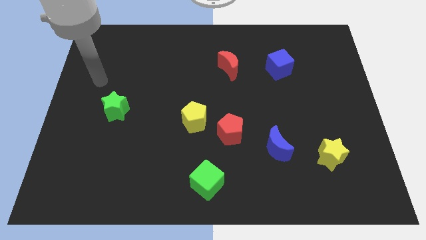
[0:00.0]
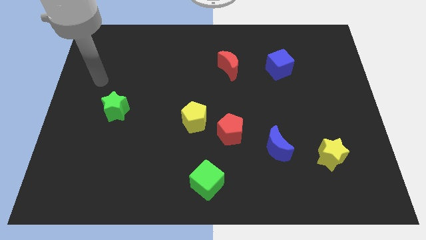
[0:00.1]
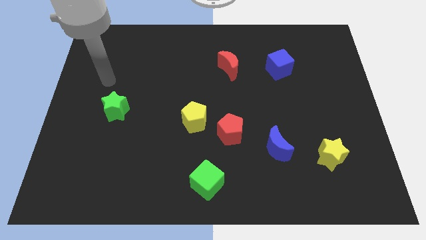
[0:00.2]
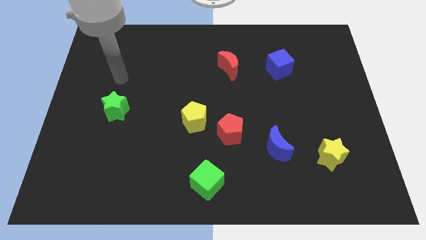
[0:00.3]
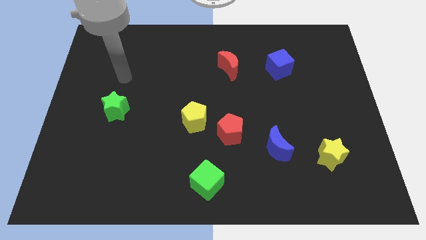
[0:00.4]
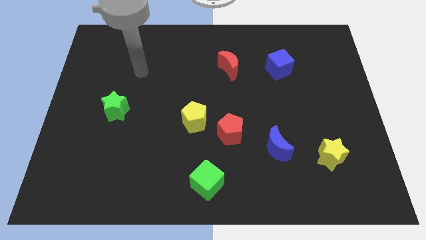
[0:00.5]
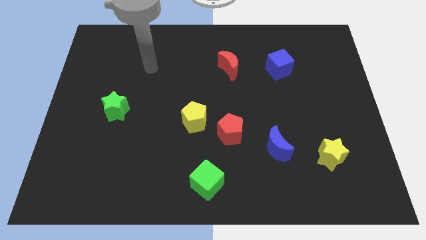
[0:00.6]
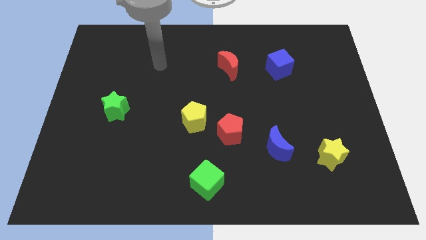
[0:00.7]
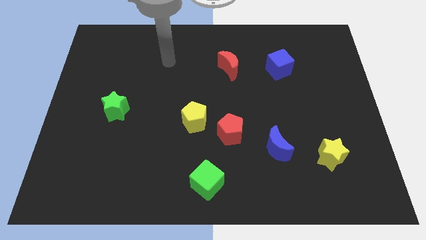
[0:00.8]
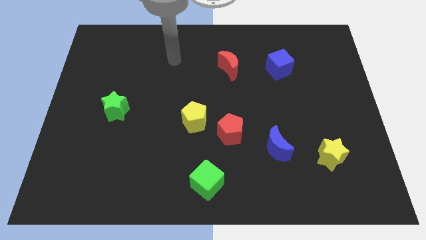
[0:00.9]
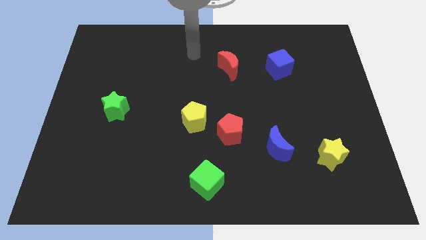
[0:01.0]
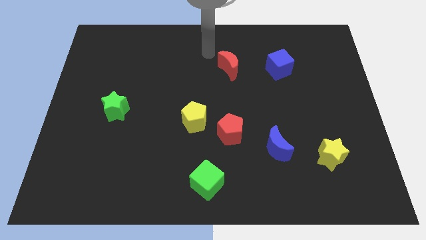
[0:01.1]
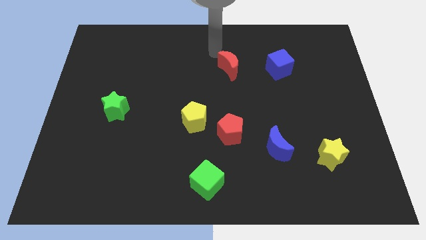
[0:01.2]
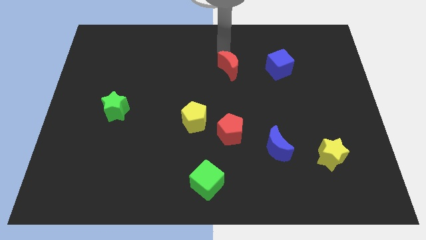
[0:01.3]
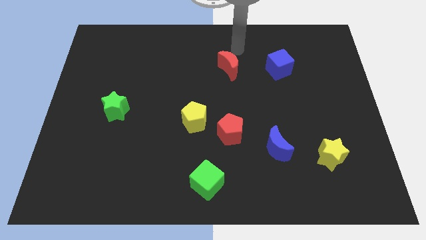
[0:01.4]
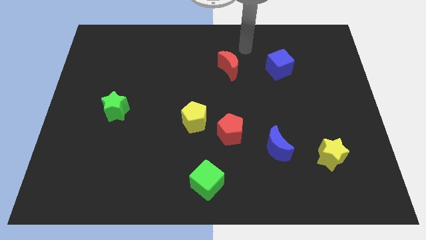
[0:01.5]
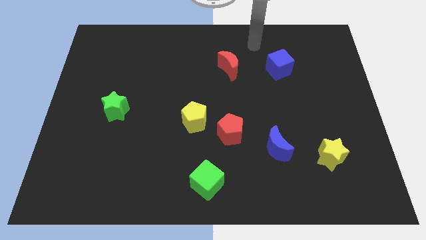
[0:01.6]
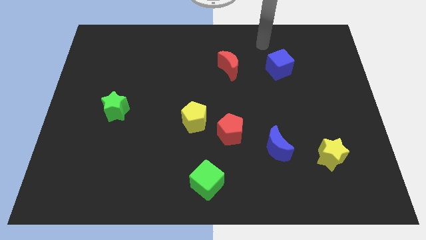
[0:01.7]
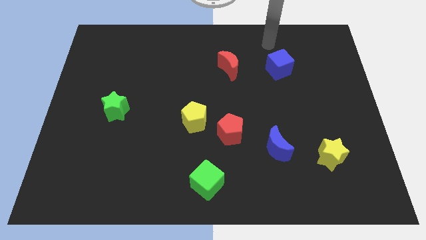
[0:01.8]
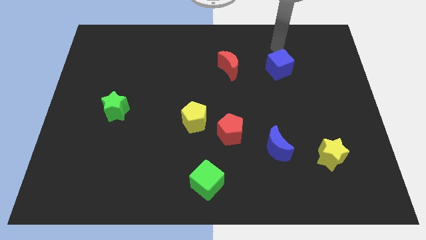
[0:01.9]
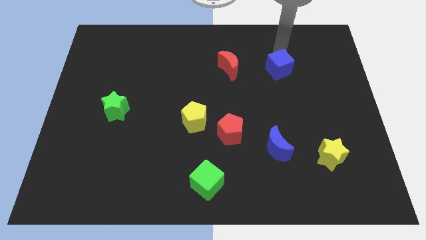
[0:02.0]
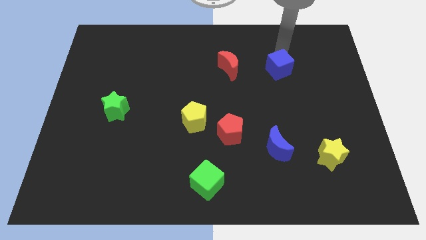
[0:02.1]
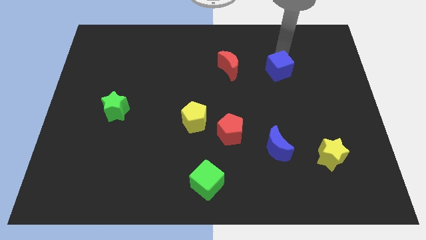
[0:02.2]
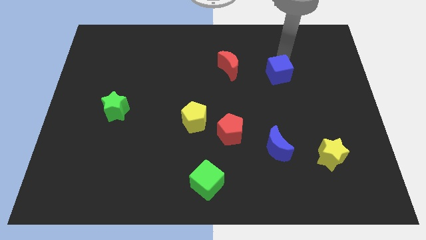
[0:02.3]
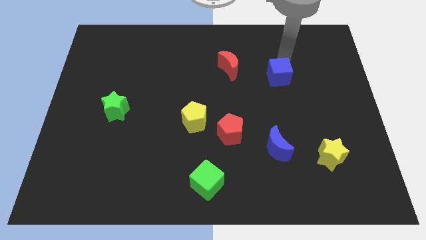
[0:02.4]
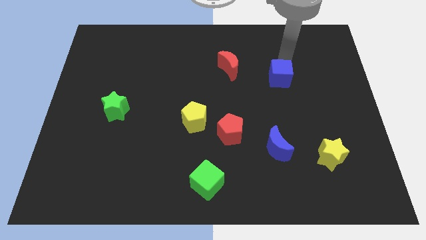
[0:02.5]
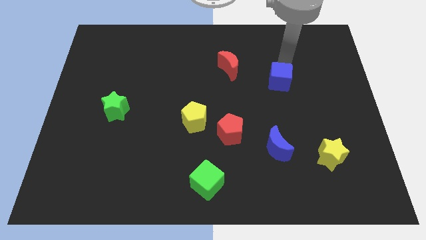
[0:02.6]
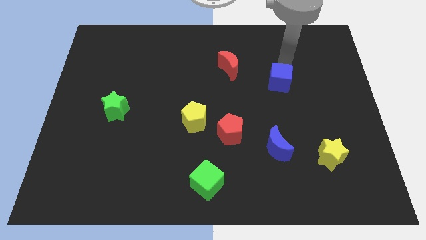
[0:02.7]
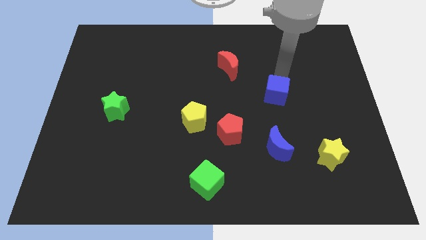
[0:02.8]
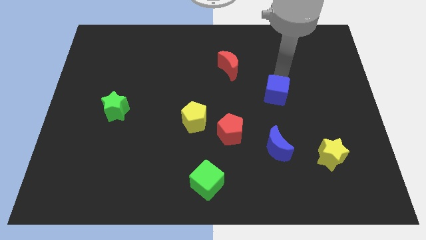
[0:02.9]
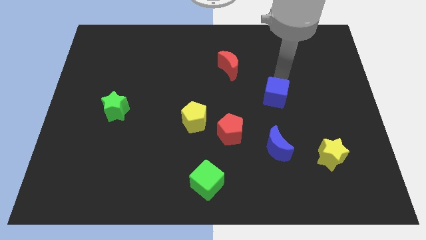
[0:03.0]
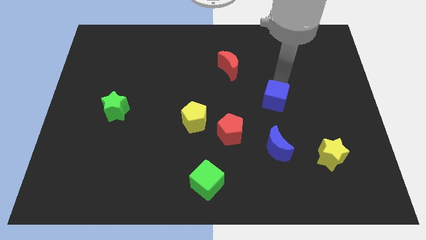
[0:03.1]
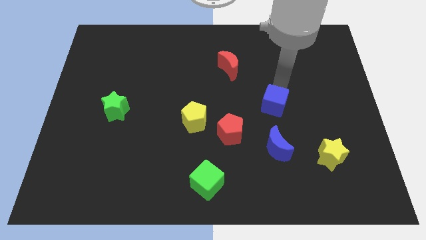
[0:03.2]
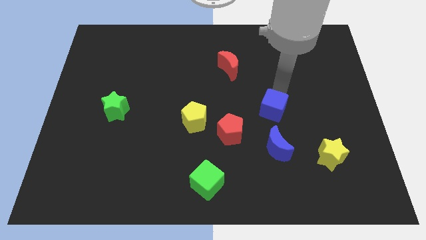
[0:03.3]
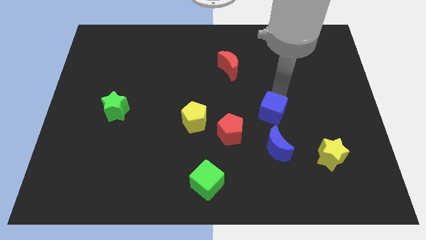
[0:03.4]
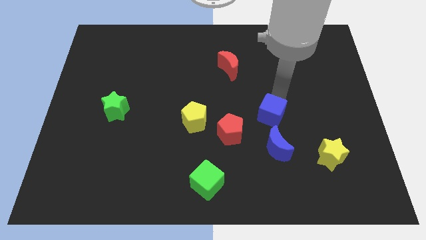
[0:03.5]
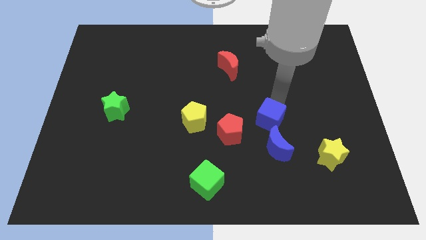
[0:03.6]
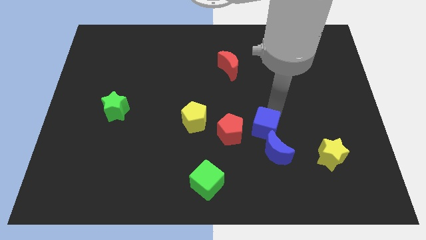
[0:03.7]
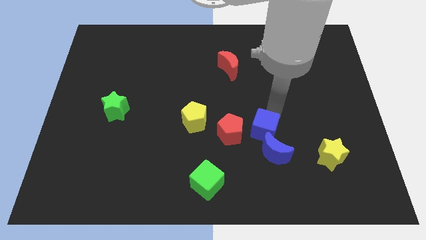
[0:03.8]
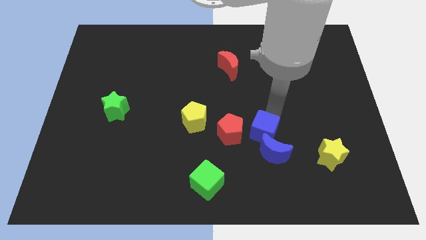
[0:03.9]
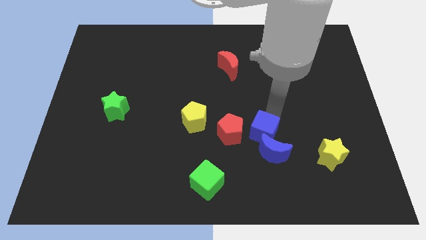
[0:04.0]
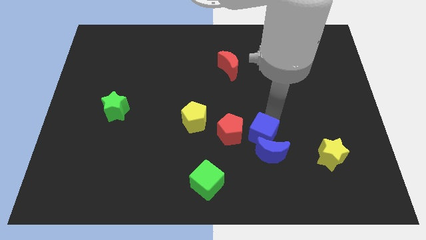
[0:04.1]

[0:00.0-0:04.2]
push the blue cube towards the blue moon

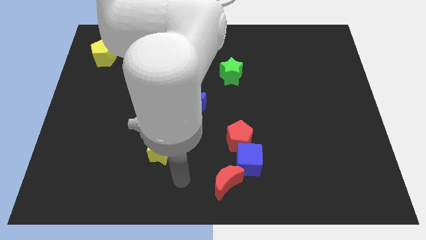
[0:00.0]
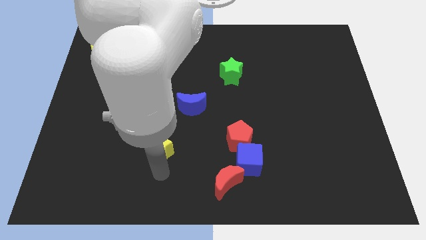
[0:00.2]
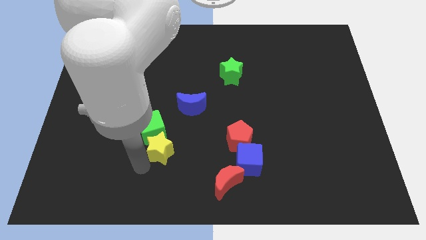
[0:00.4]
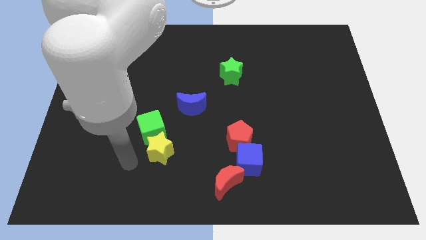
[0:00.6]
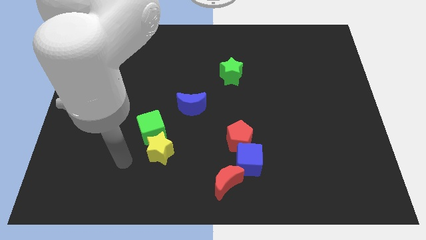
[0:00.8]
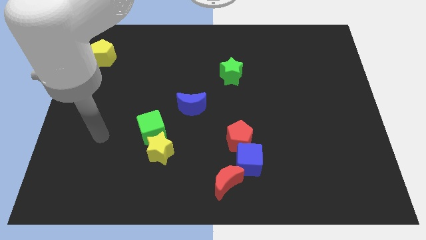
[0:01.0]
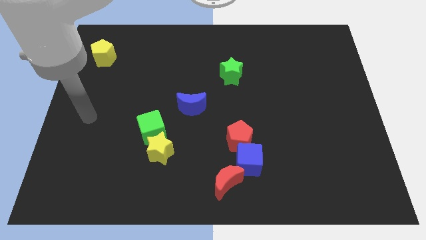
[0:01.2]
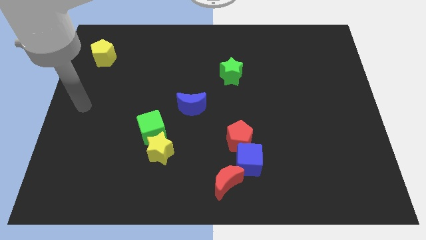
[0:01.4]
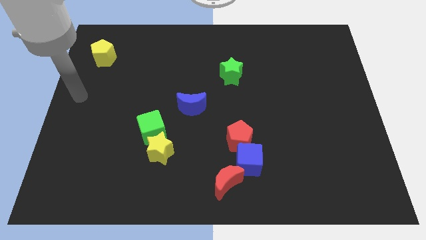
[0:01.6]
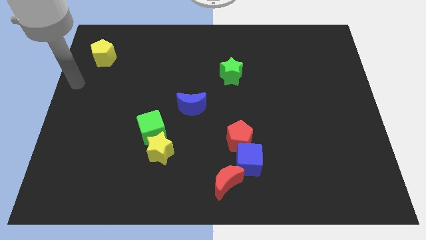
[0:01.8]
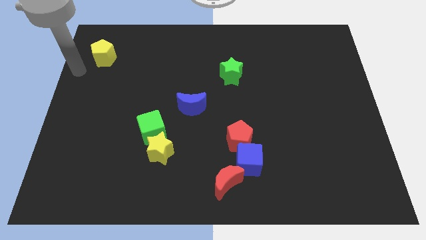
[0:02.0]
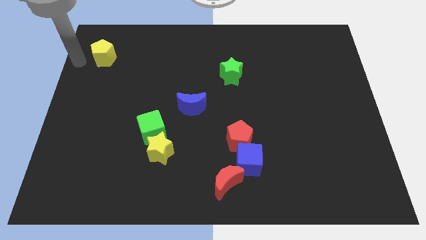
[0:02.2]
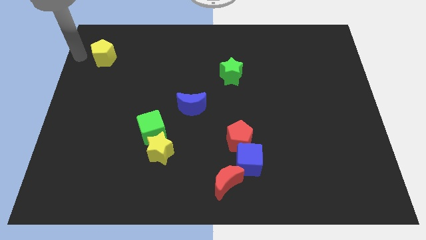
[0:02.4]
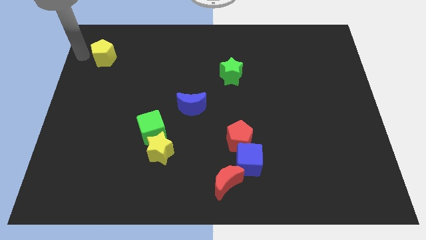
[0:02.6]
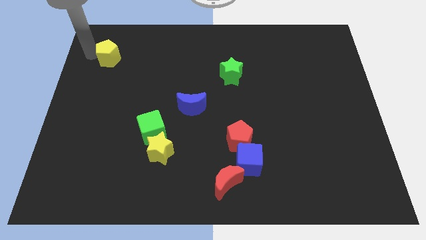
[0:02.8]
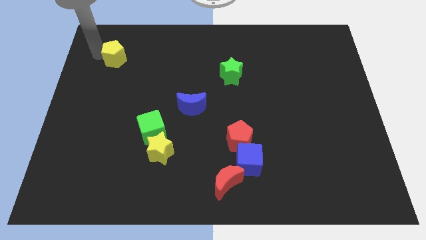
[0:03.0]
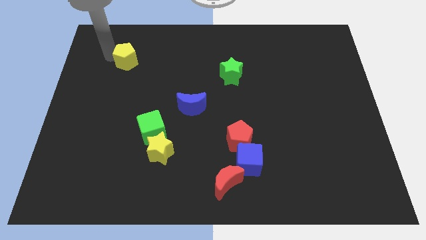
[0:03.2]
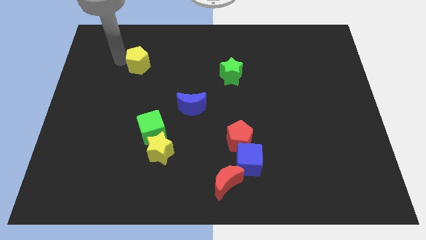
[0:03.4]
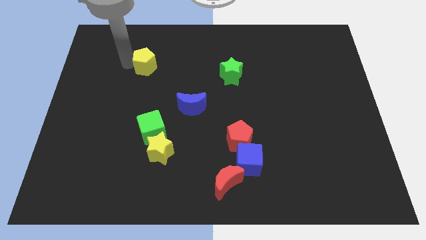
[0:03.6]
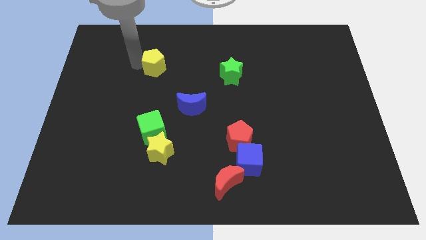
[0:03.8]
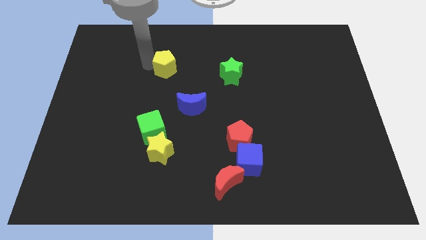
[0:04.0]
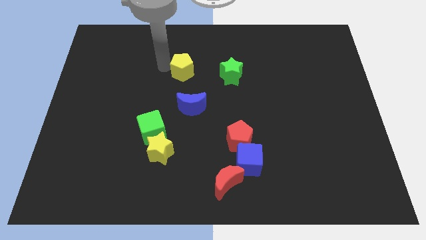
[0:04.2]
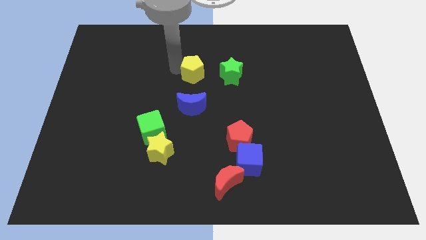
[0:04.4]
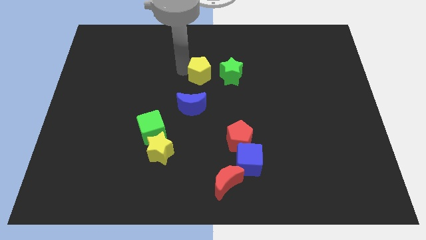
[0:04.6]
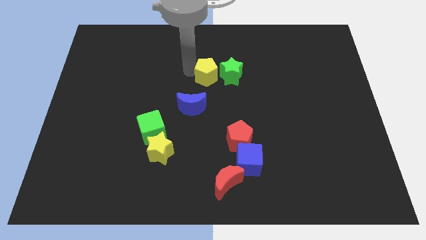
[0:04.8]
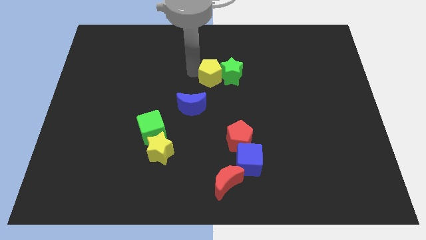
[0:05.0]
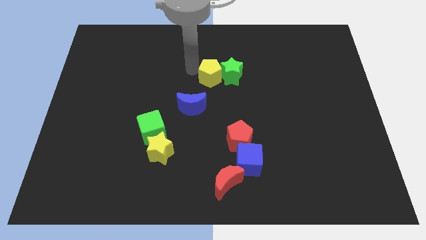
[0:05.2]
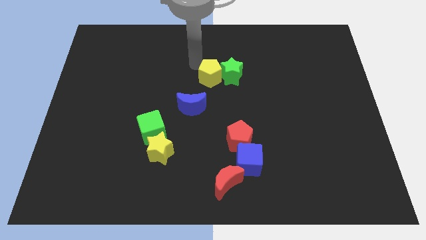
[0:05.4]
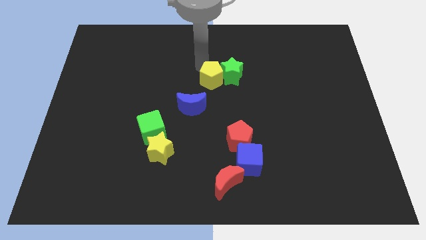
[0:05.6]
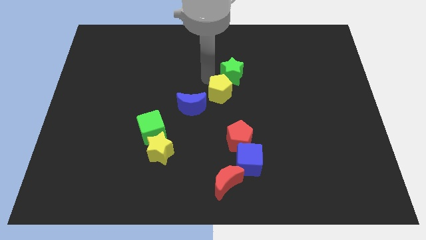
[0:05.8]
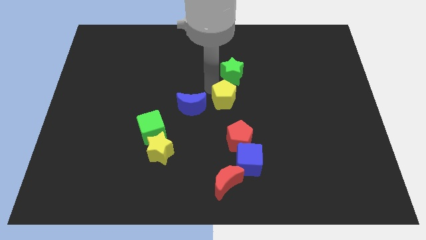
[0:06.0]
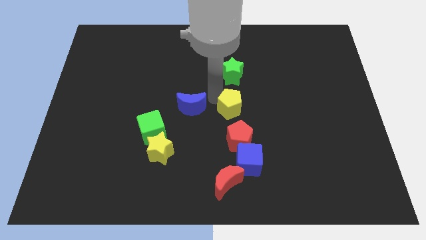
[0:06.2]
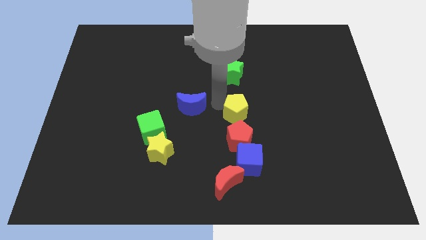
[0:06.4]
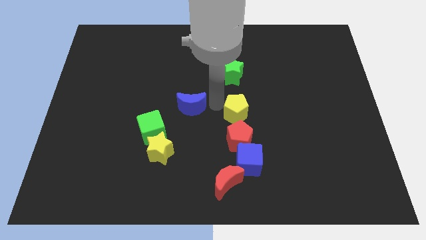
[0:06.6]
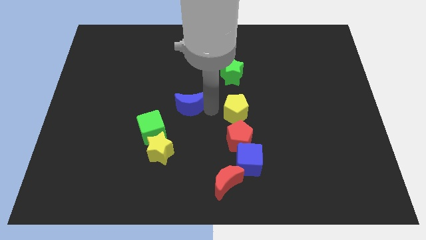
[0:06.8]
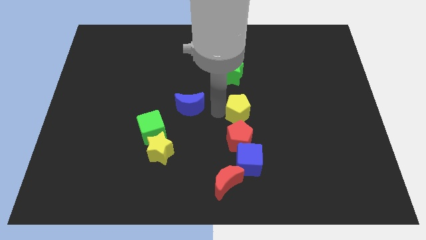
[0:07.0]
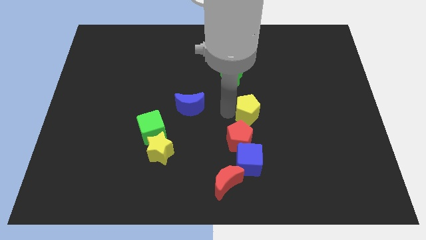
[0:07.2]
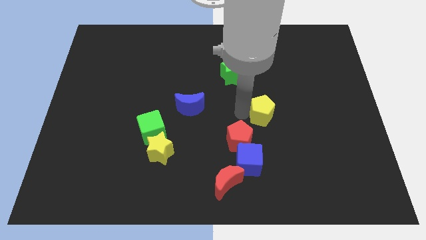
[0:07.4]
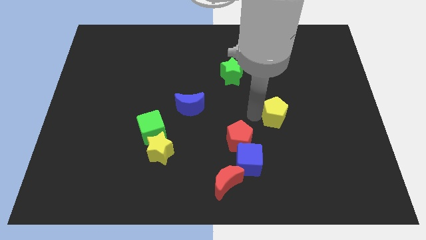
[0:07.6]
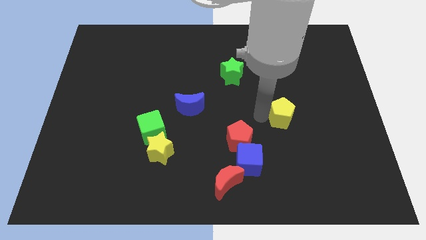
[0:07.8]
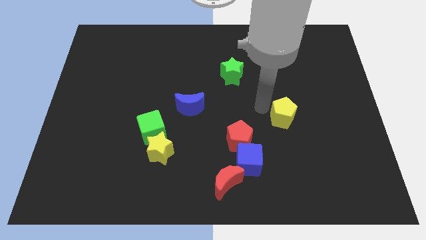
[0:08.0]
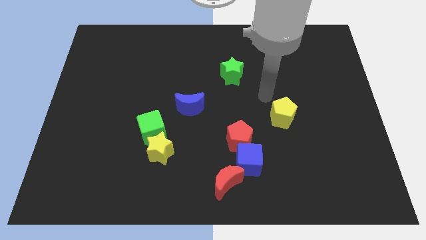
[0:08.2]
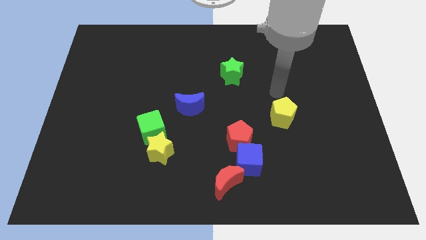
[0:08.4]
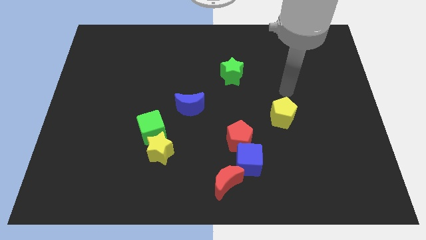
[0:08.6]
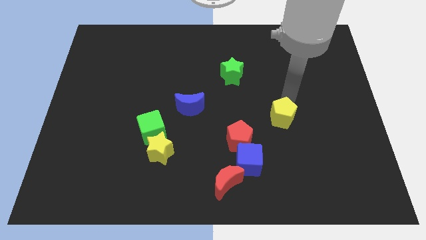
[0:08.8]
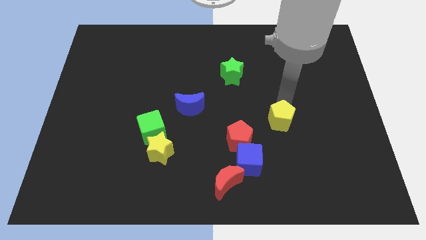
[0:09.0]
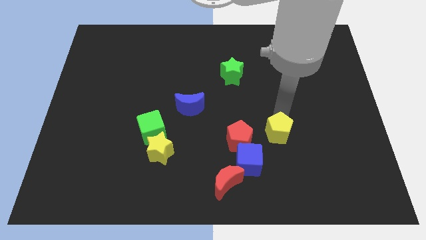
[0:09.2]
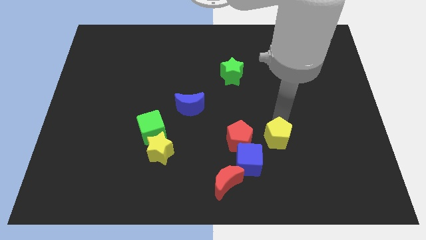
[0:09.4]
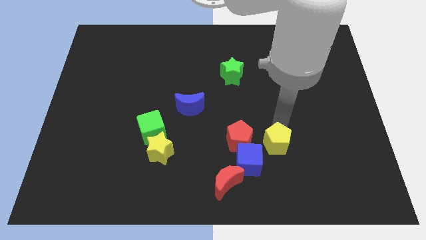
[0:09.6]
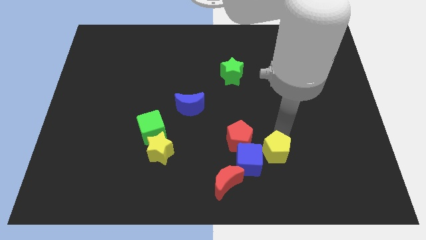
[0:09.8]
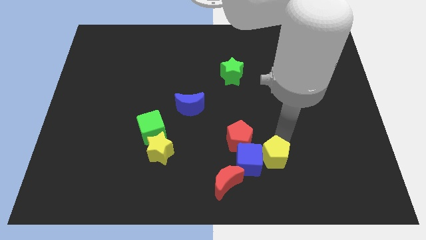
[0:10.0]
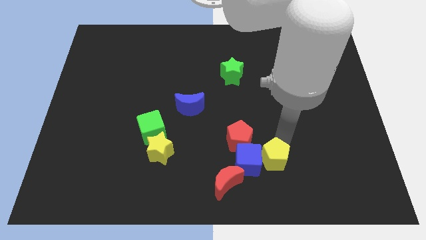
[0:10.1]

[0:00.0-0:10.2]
put the yellow pentagon next to the blue cube
